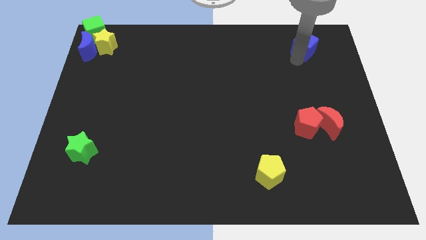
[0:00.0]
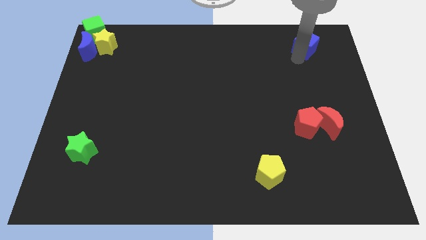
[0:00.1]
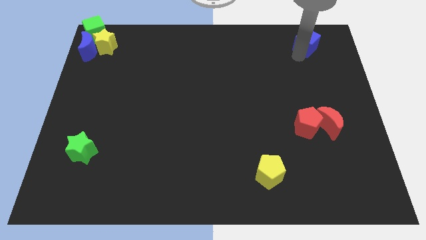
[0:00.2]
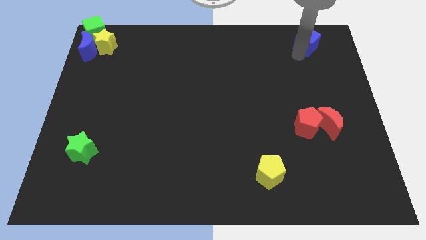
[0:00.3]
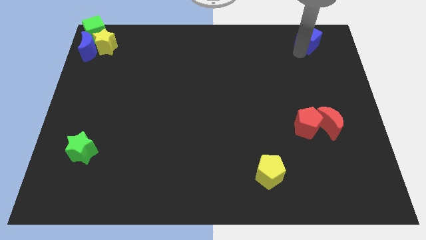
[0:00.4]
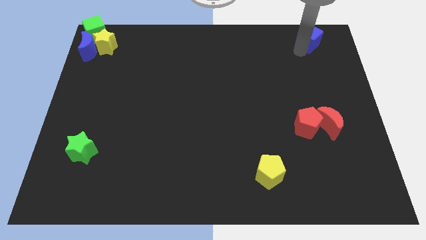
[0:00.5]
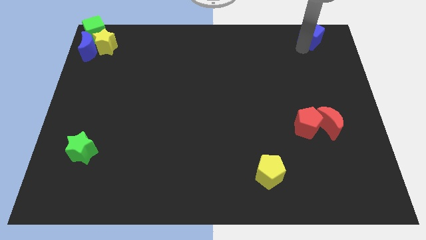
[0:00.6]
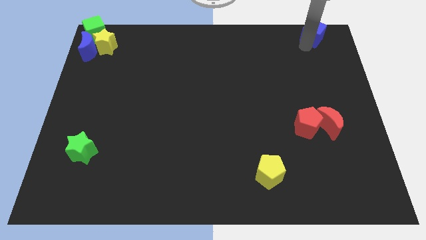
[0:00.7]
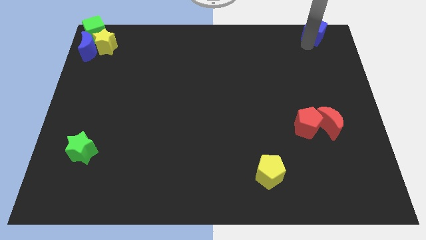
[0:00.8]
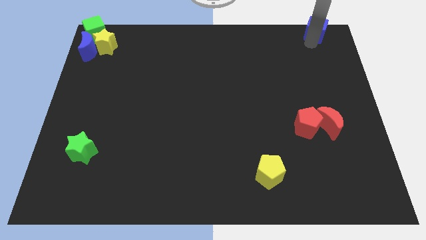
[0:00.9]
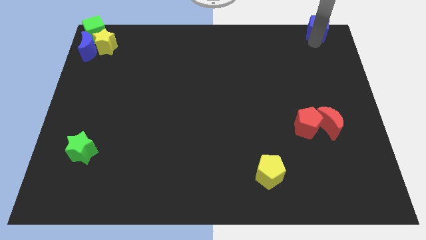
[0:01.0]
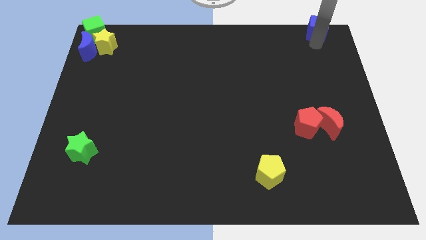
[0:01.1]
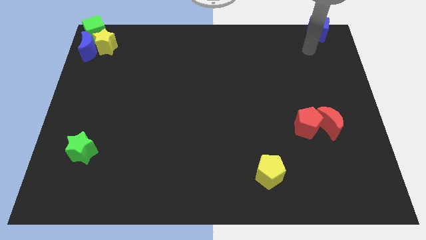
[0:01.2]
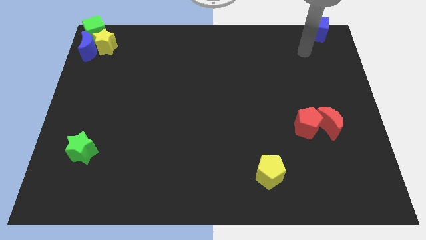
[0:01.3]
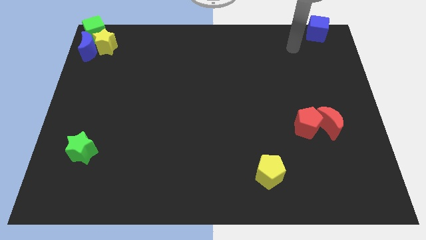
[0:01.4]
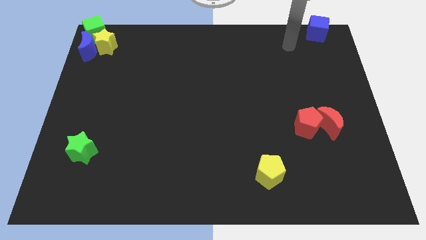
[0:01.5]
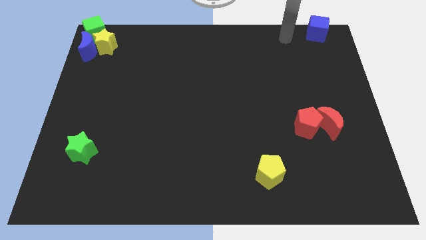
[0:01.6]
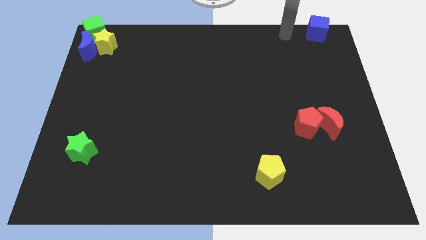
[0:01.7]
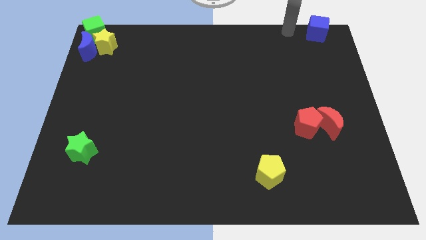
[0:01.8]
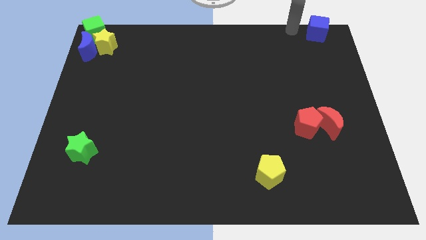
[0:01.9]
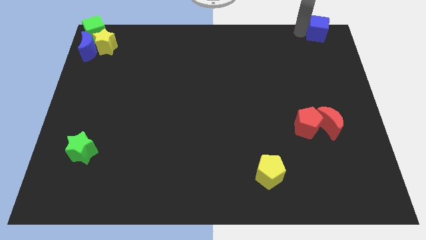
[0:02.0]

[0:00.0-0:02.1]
place the blue cube at the top right

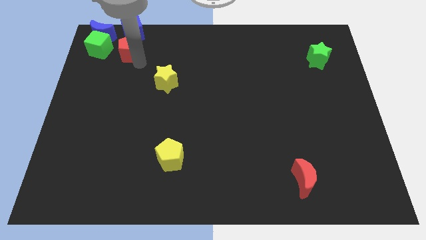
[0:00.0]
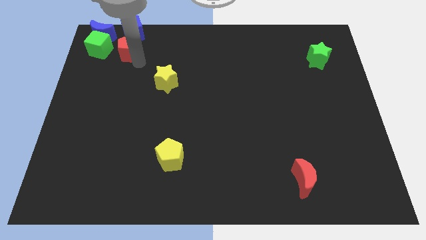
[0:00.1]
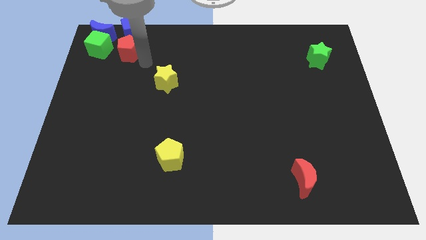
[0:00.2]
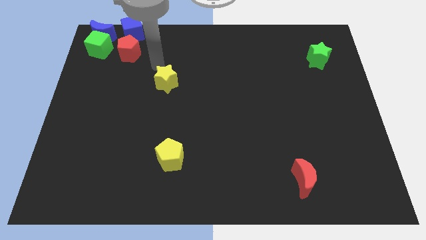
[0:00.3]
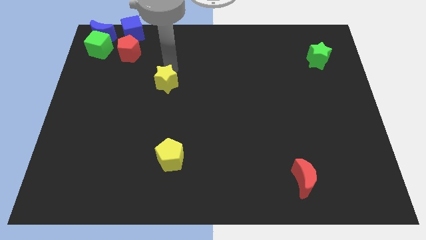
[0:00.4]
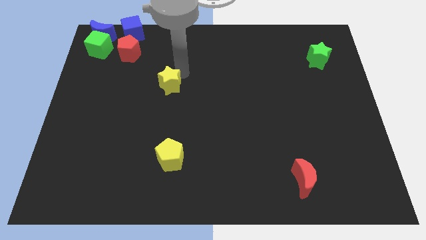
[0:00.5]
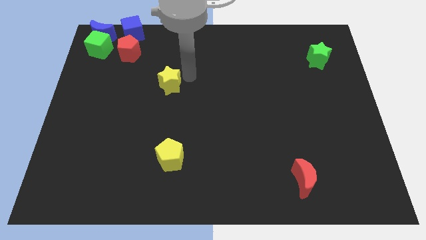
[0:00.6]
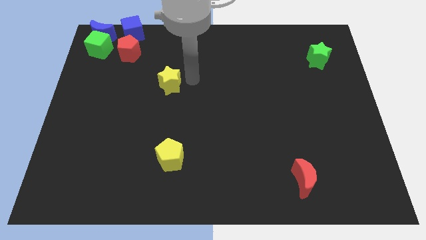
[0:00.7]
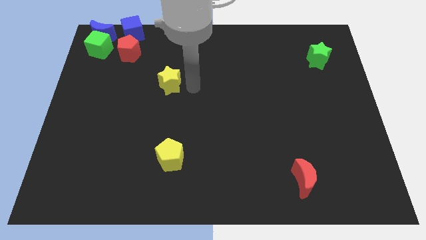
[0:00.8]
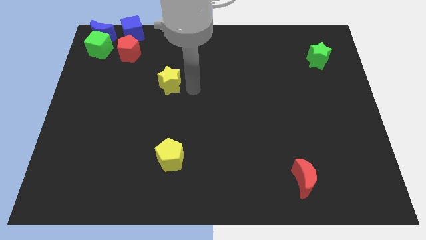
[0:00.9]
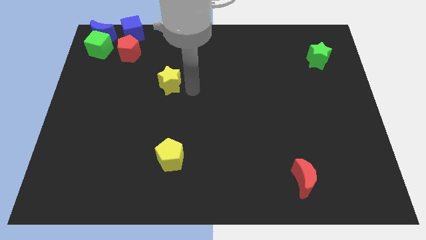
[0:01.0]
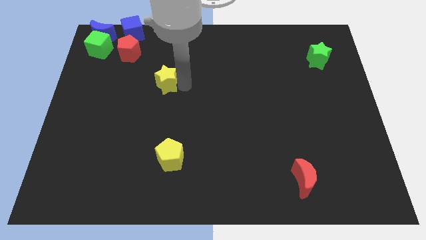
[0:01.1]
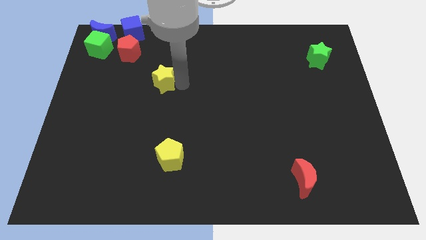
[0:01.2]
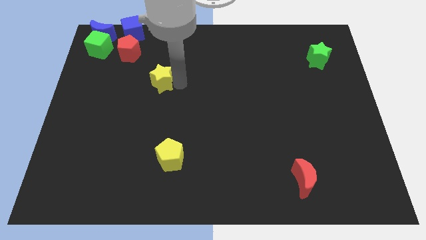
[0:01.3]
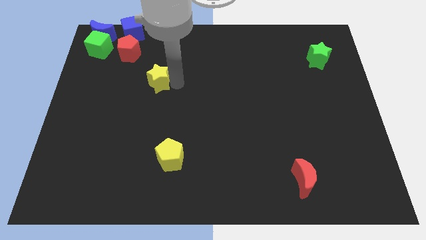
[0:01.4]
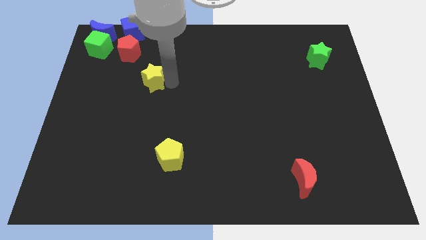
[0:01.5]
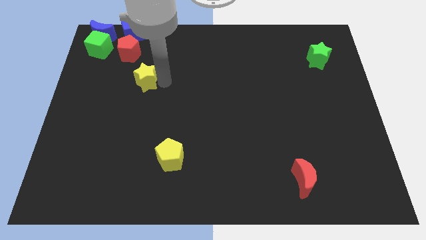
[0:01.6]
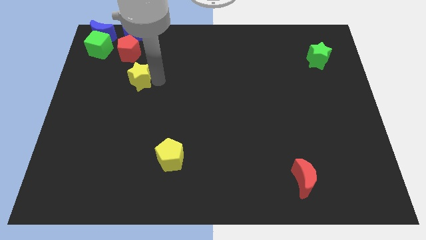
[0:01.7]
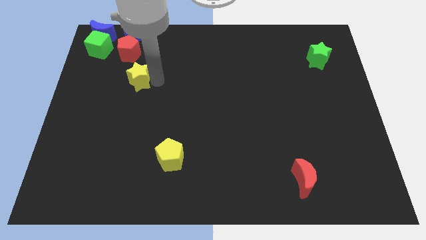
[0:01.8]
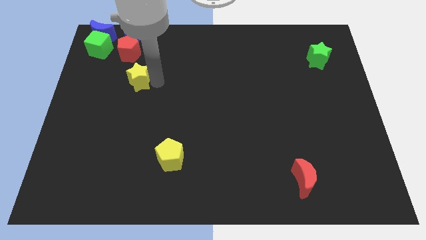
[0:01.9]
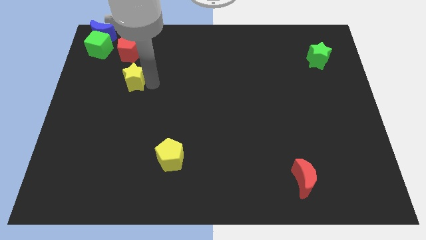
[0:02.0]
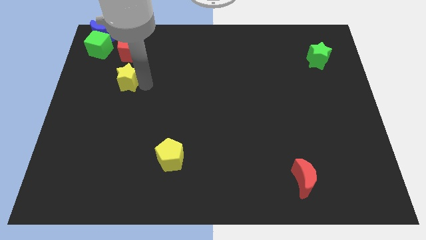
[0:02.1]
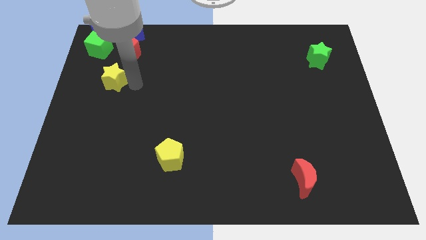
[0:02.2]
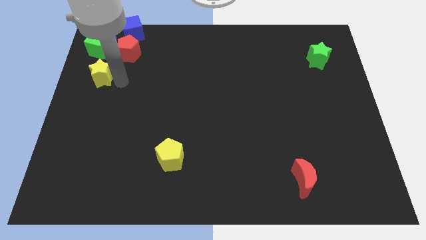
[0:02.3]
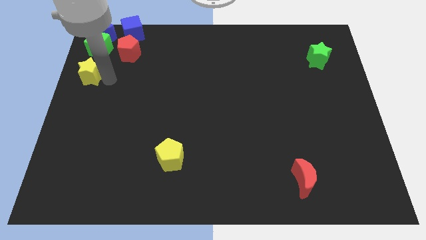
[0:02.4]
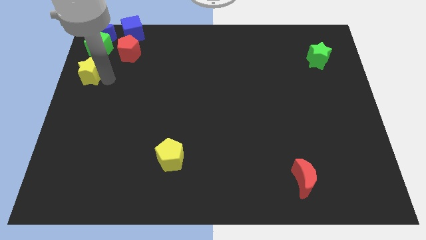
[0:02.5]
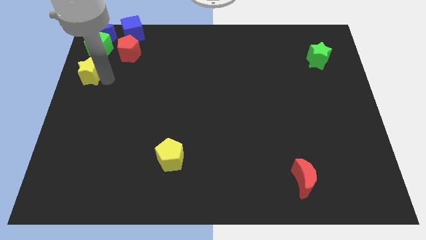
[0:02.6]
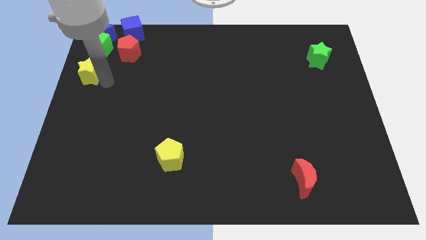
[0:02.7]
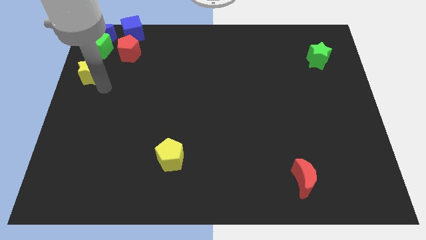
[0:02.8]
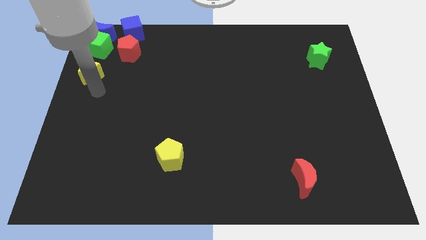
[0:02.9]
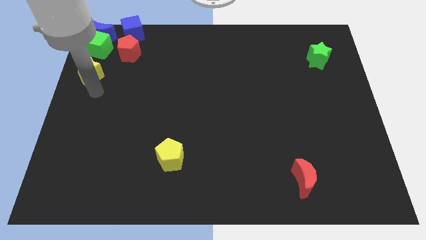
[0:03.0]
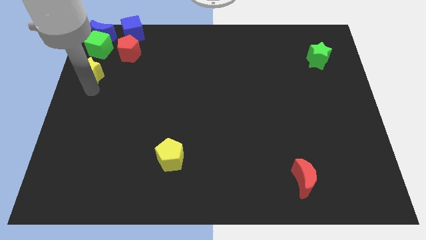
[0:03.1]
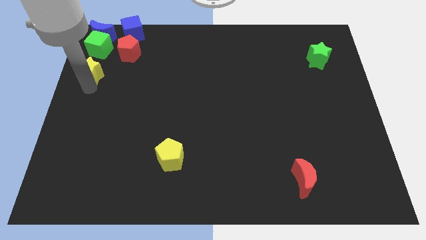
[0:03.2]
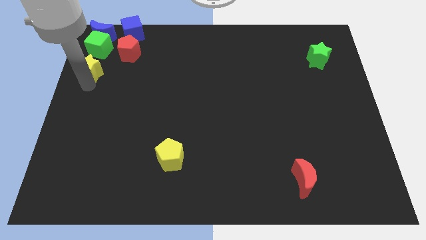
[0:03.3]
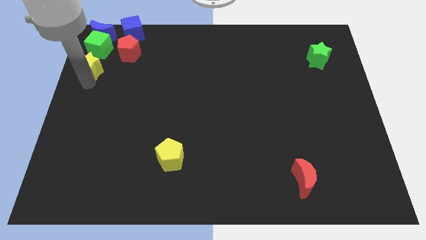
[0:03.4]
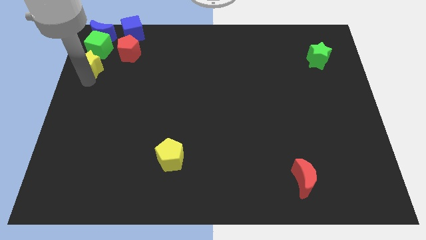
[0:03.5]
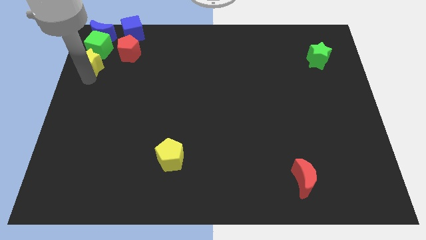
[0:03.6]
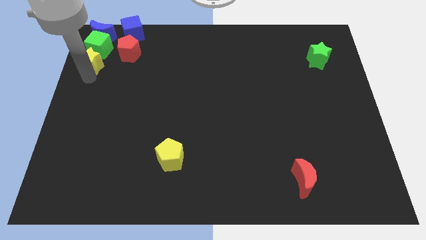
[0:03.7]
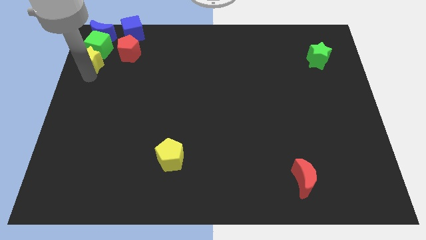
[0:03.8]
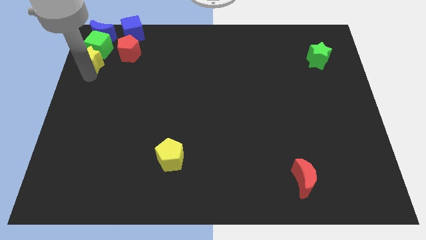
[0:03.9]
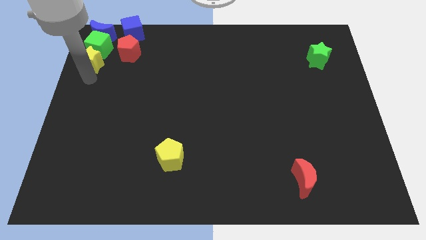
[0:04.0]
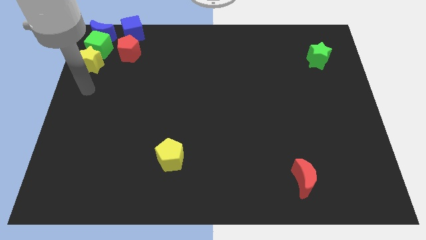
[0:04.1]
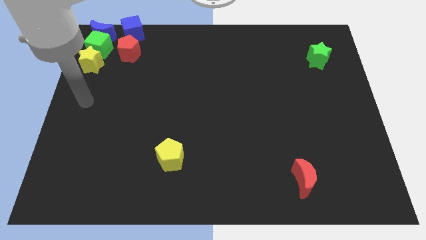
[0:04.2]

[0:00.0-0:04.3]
place yellow star to the bottom of green cube

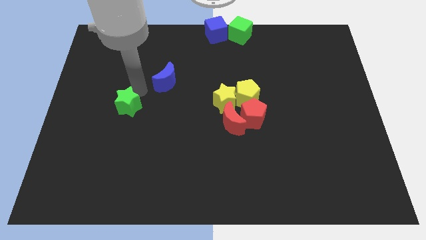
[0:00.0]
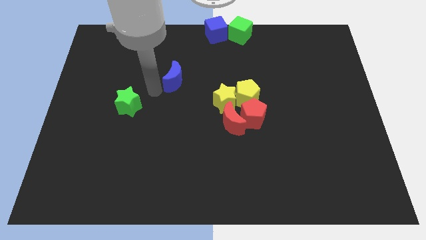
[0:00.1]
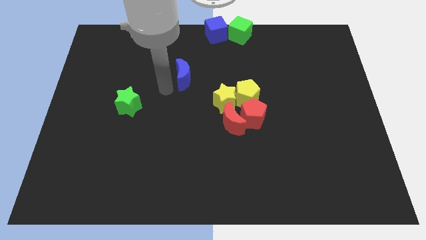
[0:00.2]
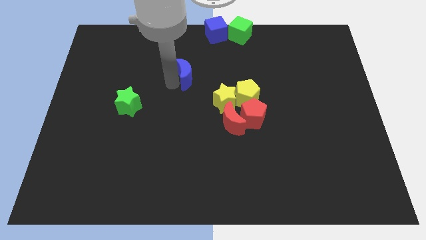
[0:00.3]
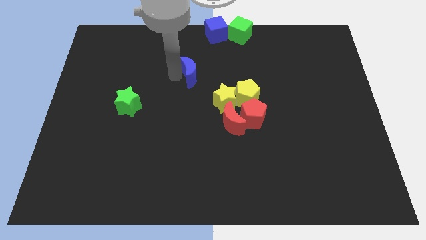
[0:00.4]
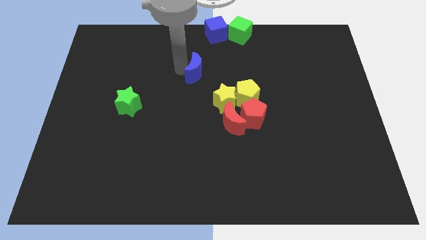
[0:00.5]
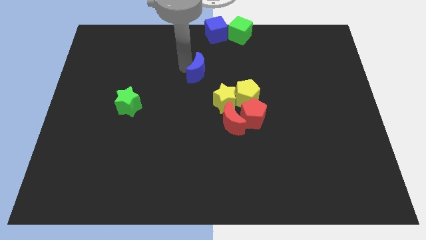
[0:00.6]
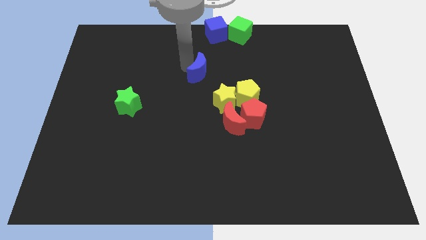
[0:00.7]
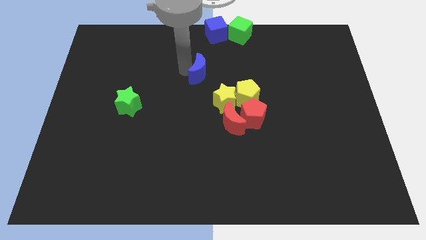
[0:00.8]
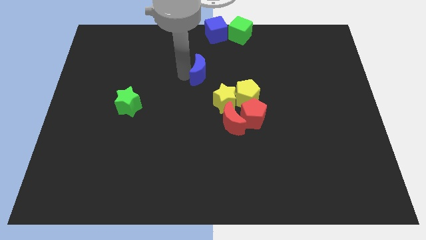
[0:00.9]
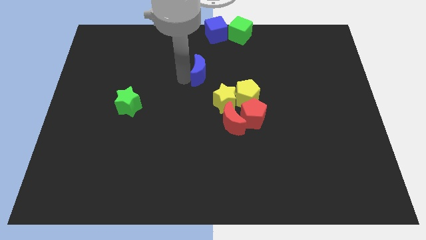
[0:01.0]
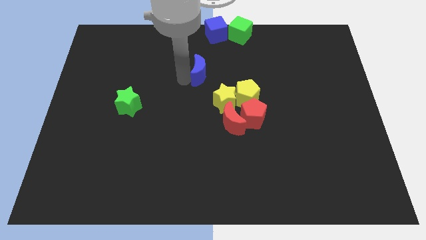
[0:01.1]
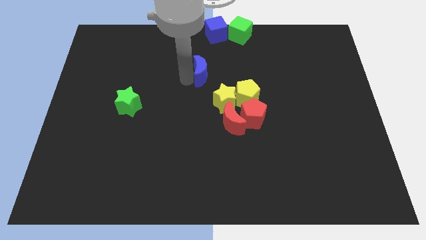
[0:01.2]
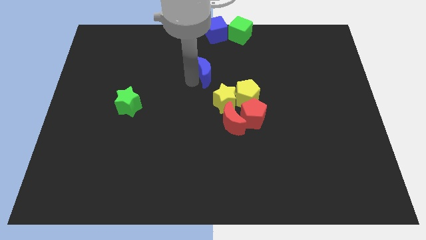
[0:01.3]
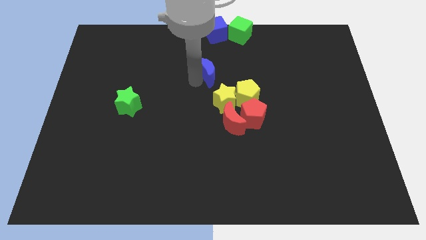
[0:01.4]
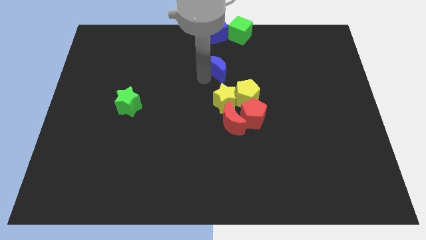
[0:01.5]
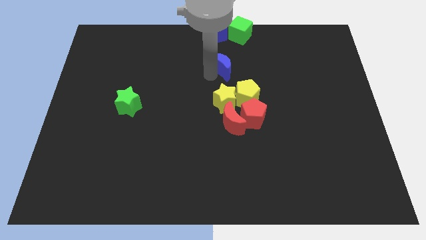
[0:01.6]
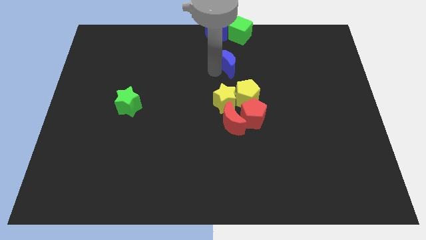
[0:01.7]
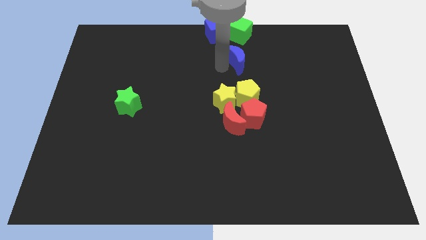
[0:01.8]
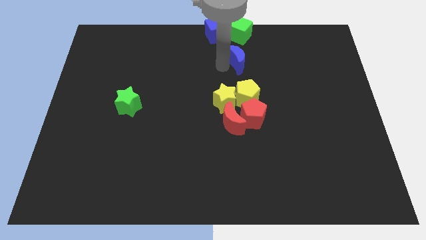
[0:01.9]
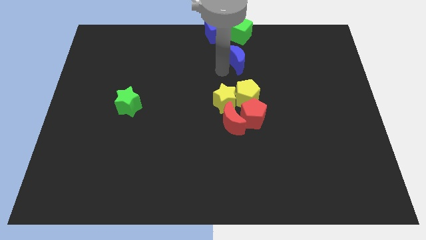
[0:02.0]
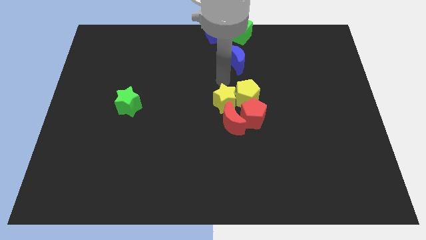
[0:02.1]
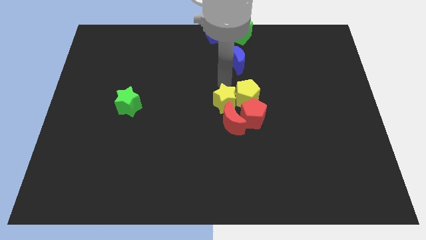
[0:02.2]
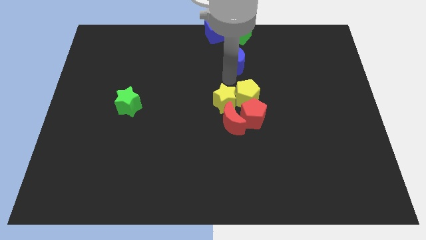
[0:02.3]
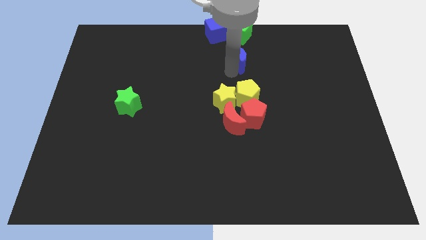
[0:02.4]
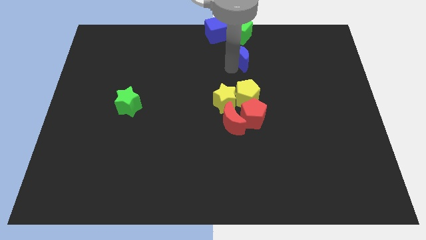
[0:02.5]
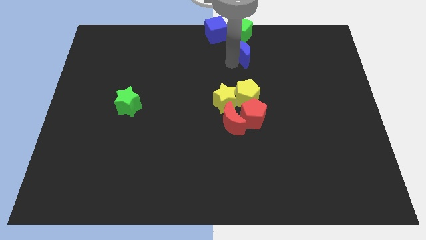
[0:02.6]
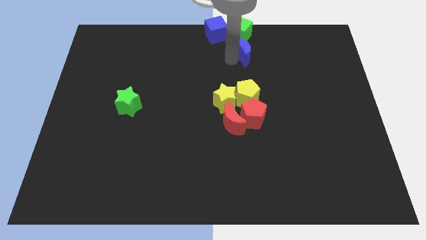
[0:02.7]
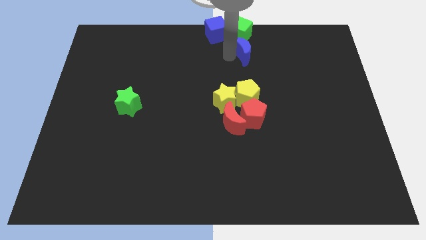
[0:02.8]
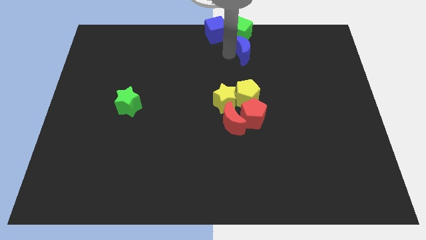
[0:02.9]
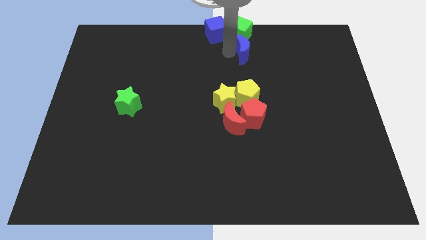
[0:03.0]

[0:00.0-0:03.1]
bring the blue moon at the bottom side of the green cube
